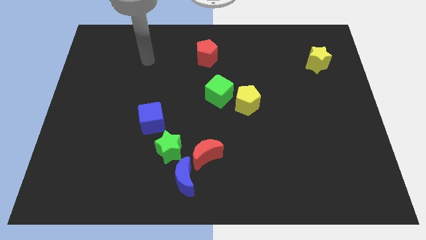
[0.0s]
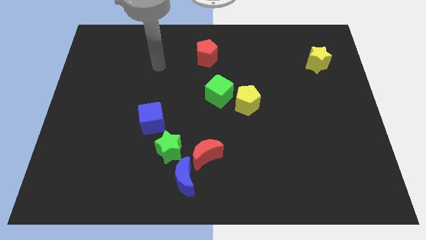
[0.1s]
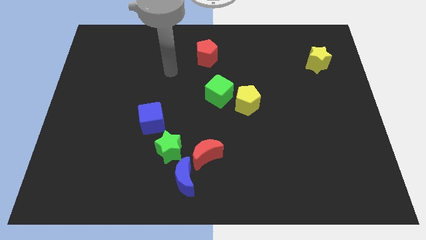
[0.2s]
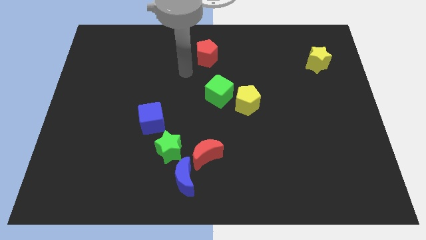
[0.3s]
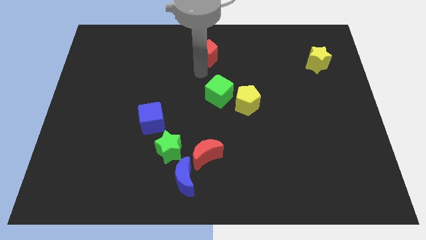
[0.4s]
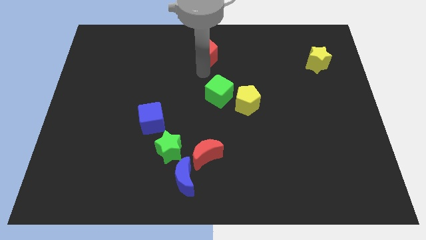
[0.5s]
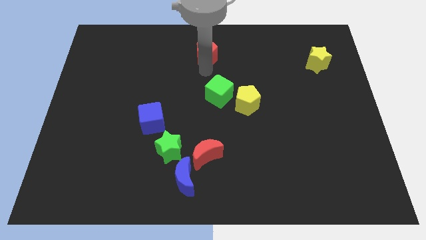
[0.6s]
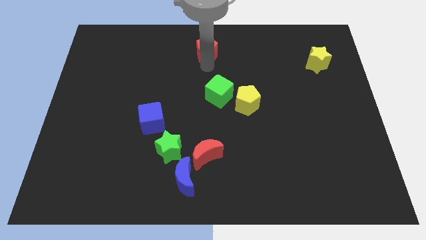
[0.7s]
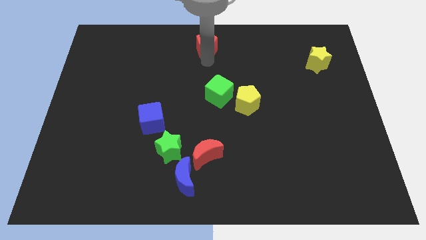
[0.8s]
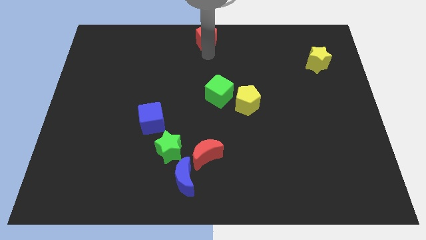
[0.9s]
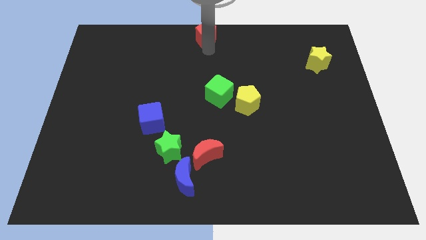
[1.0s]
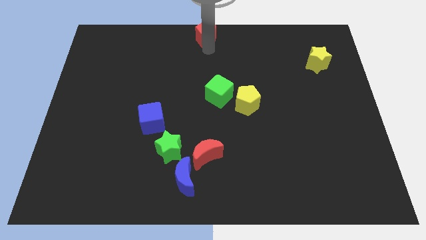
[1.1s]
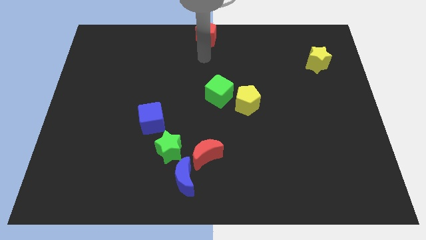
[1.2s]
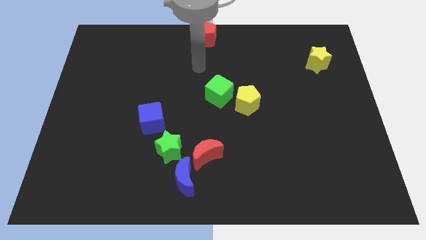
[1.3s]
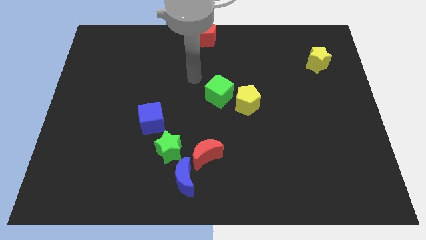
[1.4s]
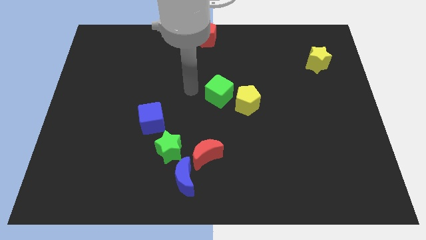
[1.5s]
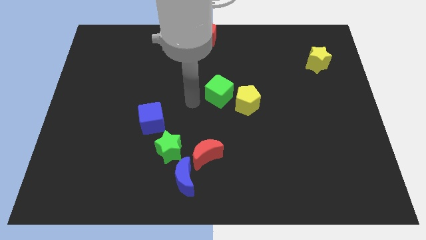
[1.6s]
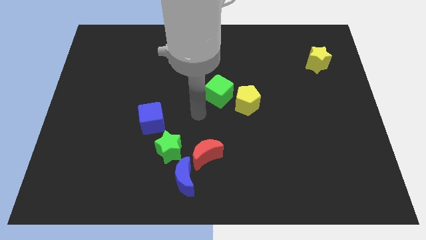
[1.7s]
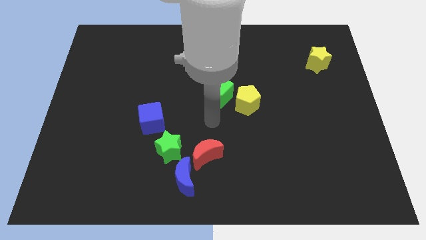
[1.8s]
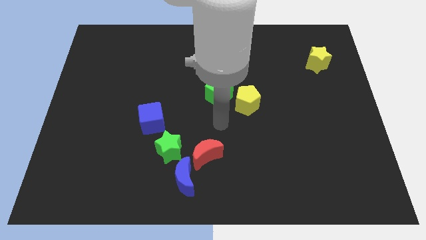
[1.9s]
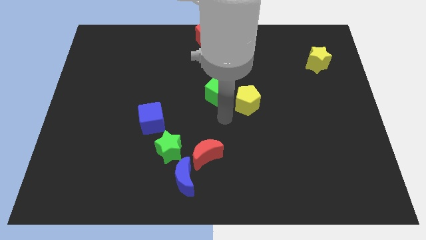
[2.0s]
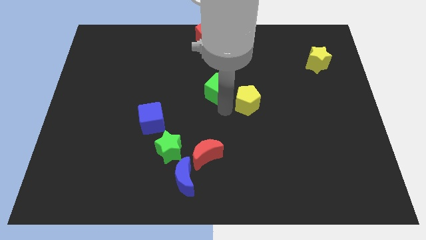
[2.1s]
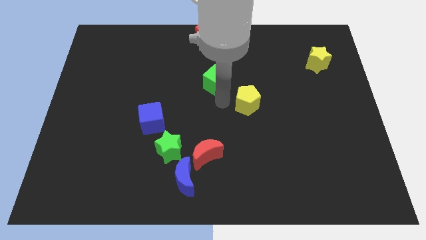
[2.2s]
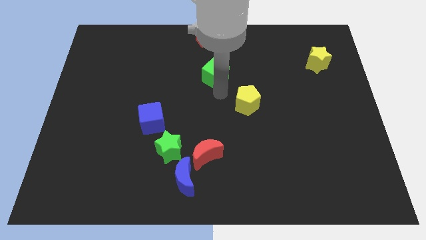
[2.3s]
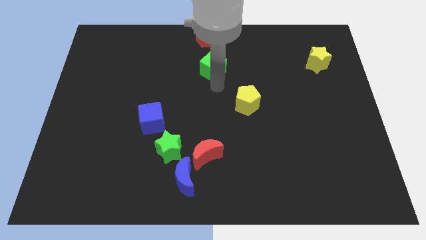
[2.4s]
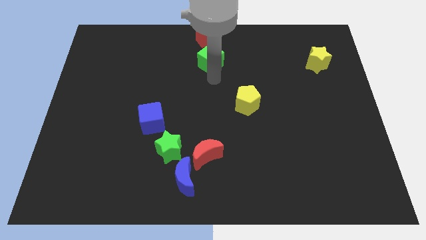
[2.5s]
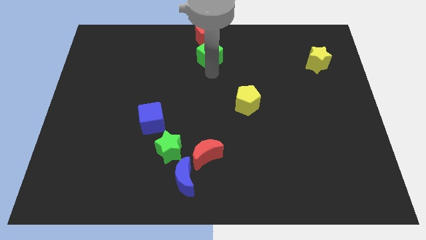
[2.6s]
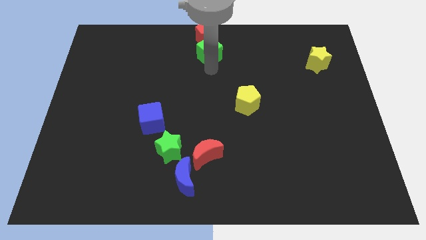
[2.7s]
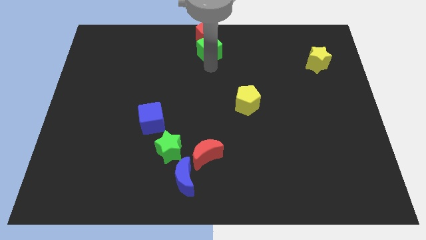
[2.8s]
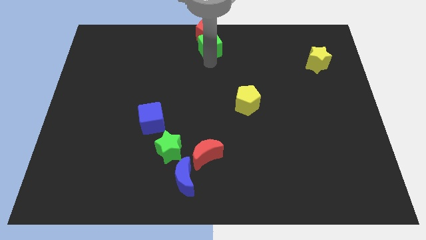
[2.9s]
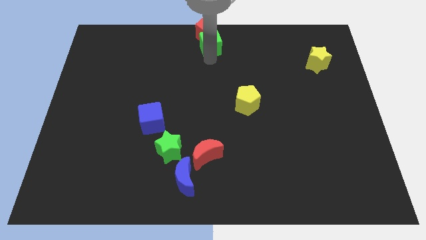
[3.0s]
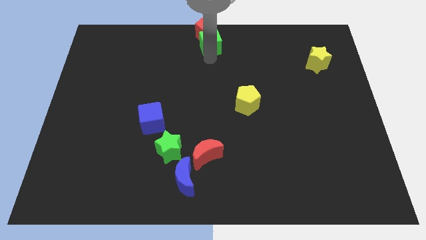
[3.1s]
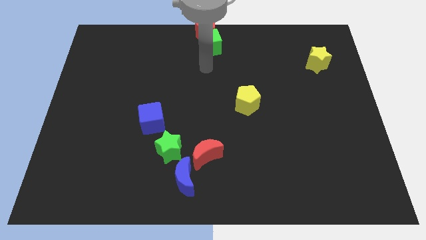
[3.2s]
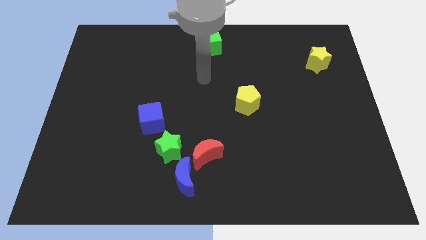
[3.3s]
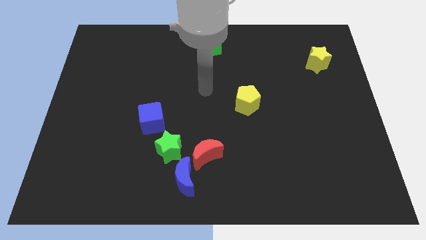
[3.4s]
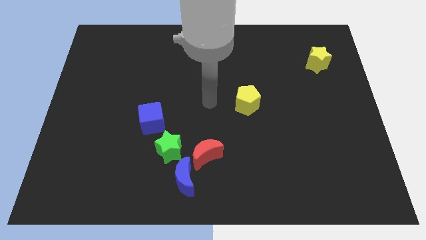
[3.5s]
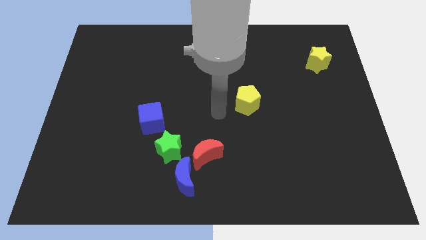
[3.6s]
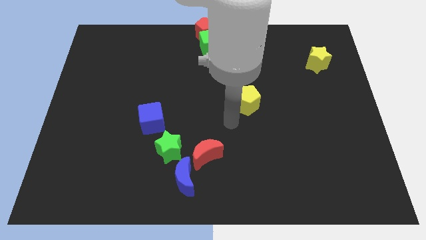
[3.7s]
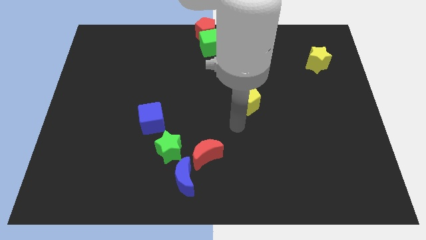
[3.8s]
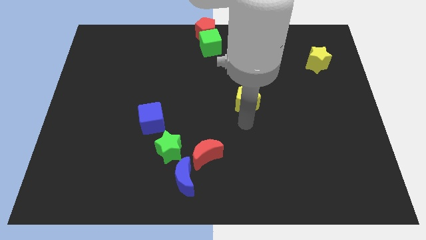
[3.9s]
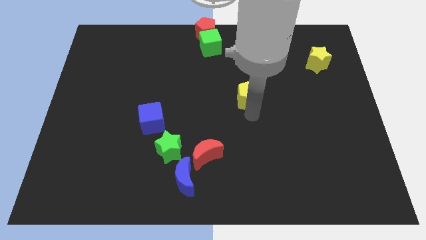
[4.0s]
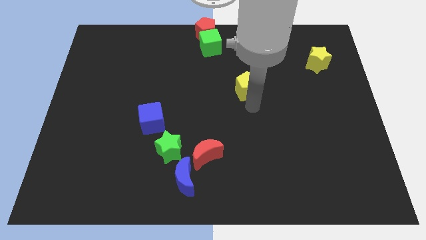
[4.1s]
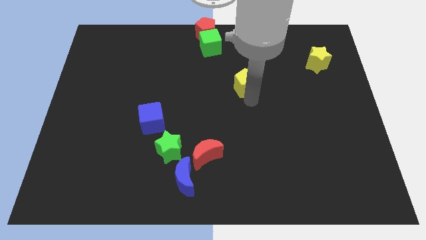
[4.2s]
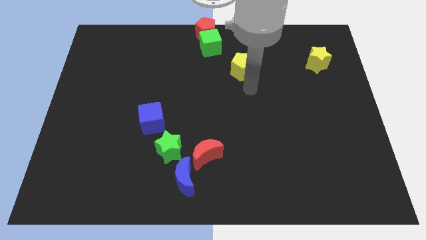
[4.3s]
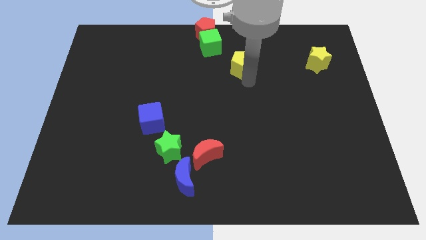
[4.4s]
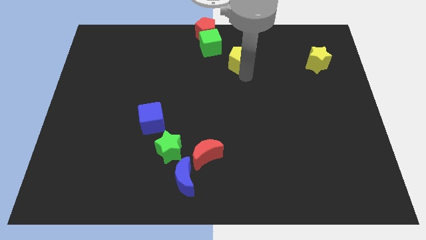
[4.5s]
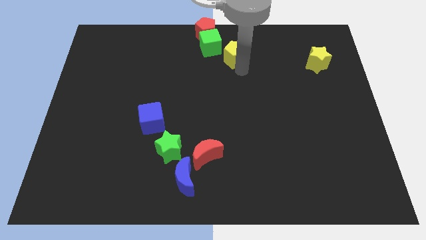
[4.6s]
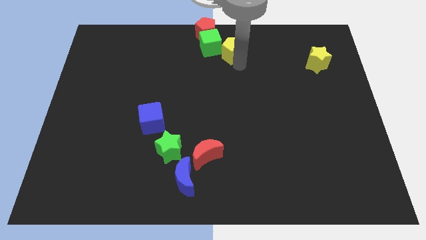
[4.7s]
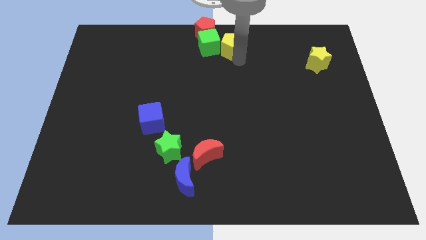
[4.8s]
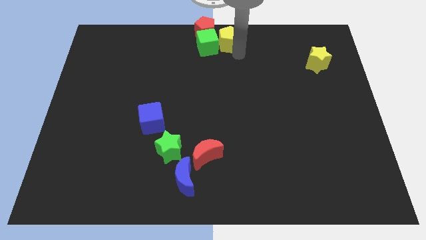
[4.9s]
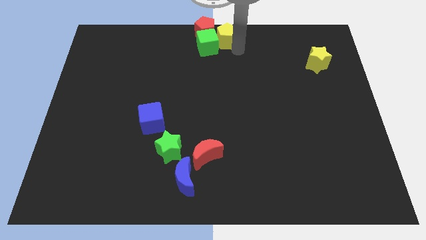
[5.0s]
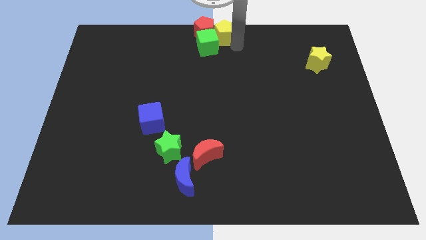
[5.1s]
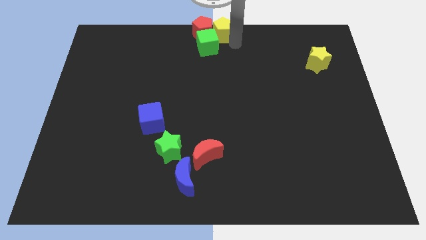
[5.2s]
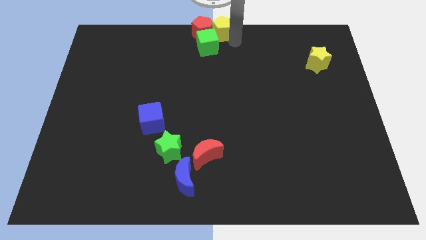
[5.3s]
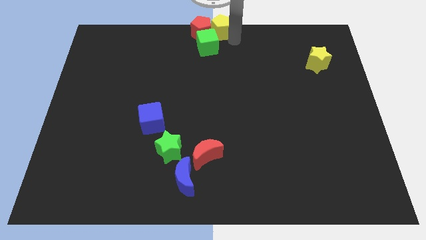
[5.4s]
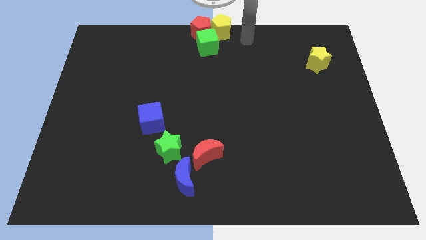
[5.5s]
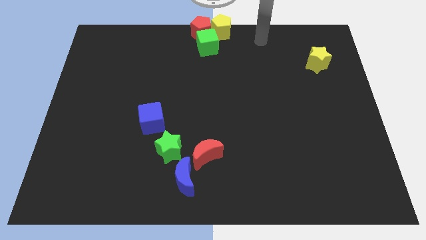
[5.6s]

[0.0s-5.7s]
move red yellow pentagon and green cube to center top

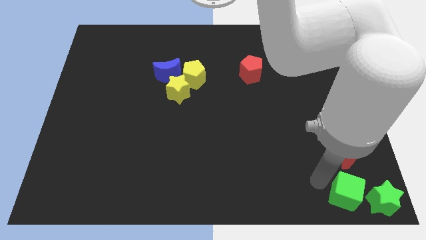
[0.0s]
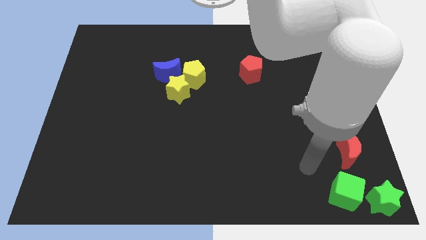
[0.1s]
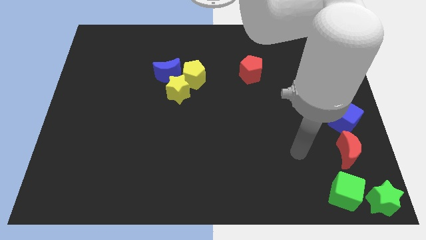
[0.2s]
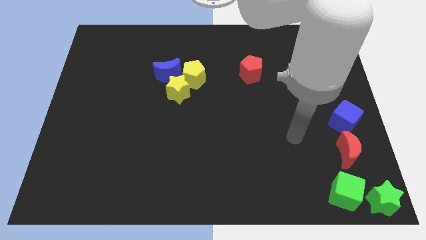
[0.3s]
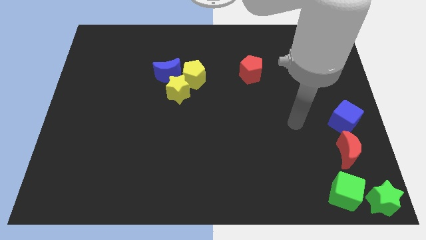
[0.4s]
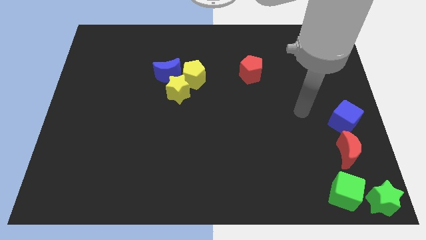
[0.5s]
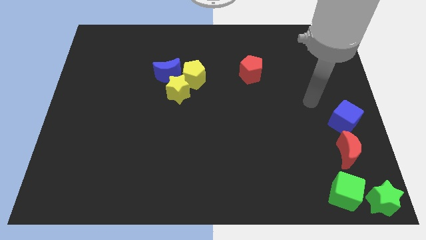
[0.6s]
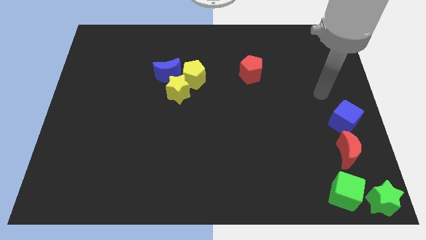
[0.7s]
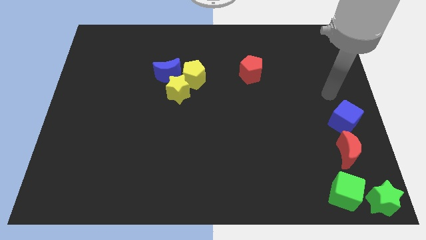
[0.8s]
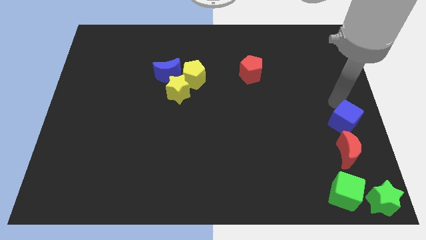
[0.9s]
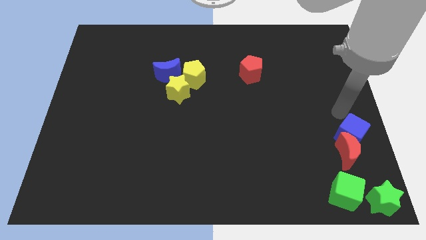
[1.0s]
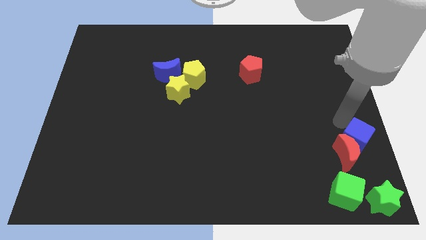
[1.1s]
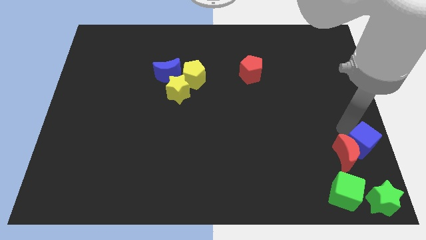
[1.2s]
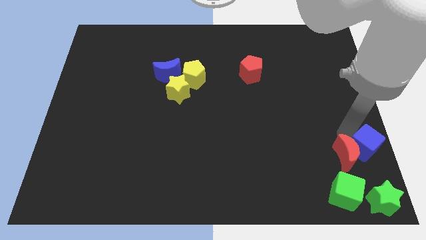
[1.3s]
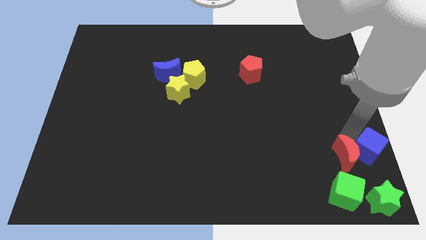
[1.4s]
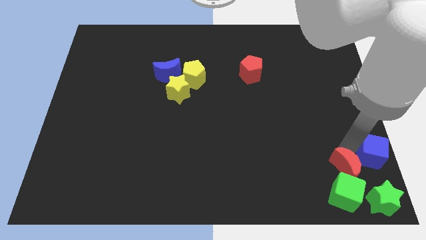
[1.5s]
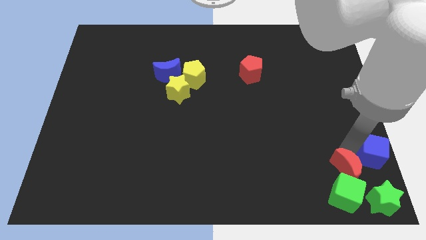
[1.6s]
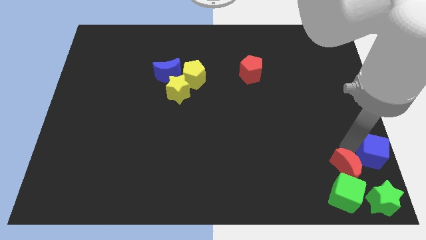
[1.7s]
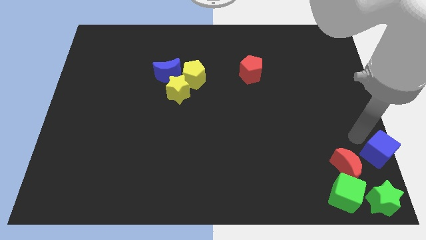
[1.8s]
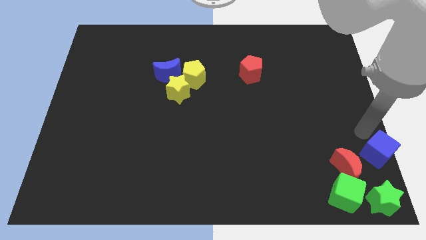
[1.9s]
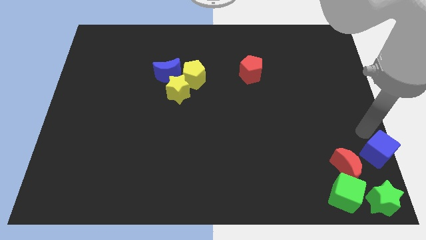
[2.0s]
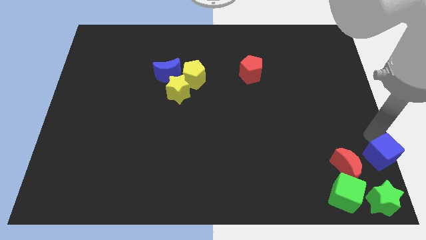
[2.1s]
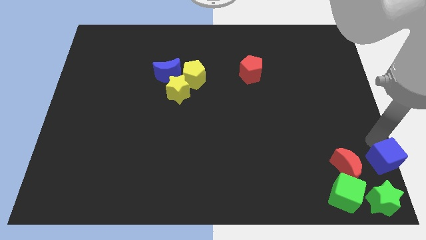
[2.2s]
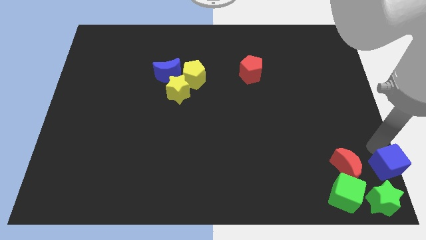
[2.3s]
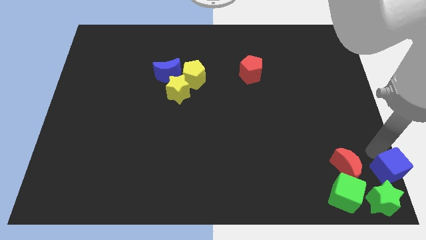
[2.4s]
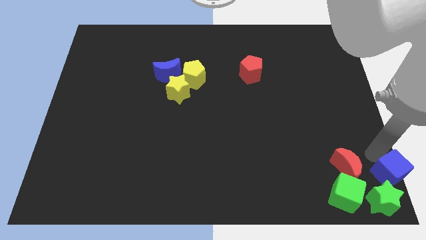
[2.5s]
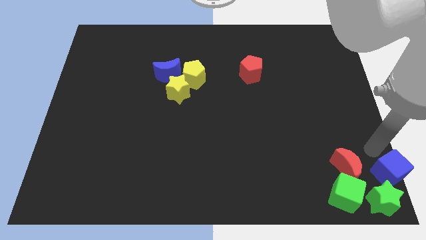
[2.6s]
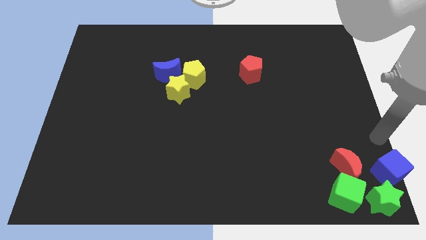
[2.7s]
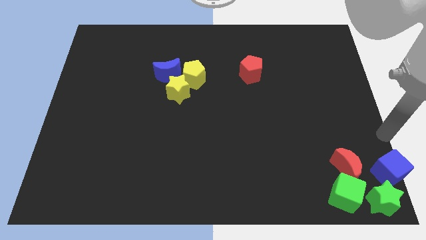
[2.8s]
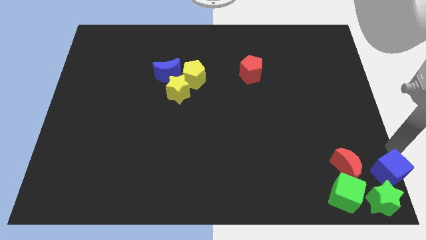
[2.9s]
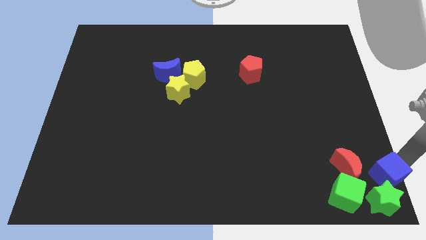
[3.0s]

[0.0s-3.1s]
place the blue cube above the green star

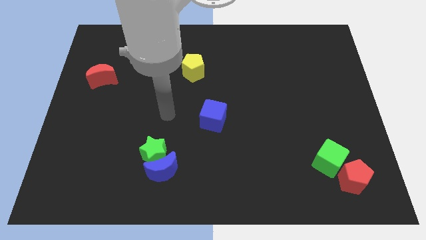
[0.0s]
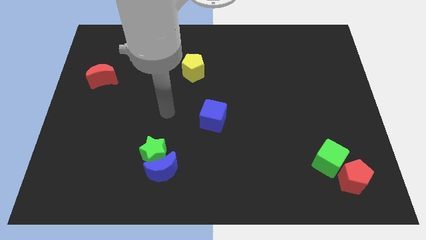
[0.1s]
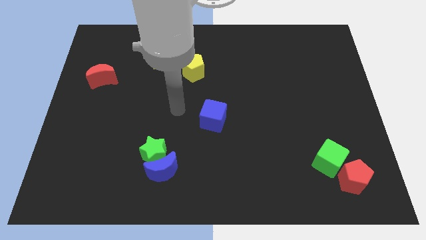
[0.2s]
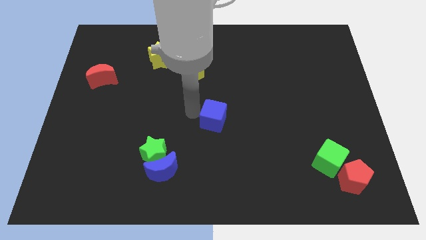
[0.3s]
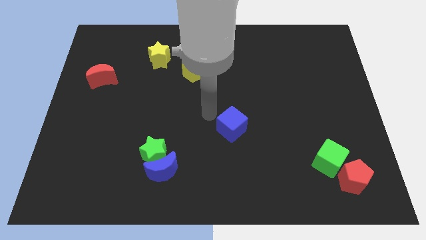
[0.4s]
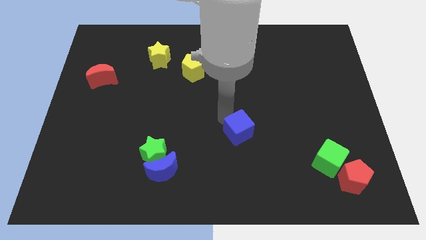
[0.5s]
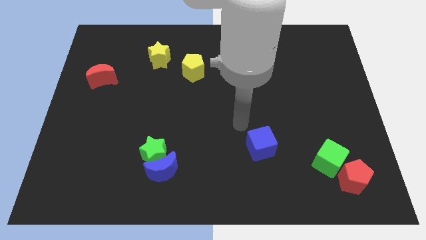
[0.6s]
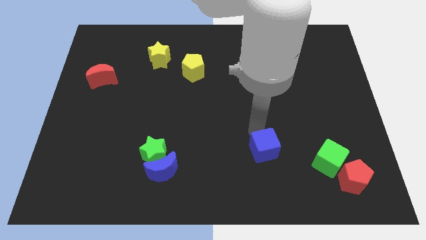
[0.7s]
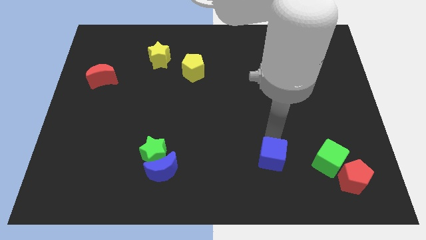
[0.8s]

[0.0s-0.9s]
move the blue cube towards right to the green cube
